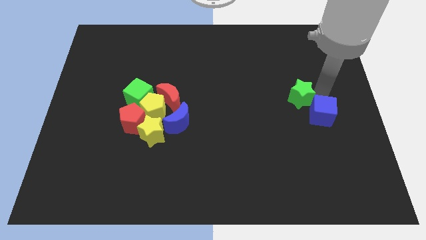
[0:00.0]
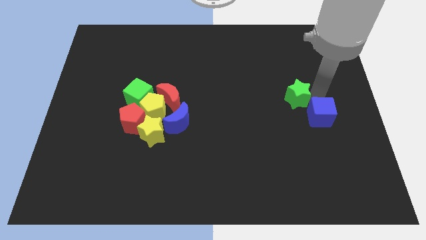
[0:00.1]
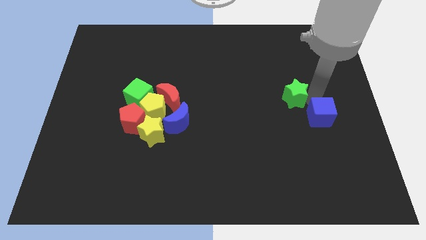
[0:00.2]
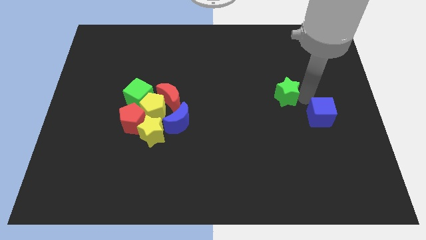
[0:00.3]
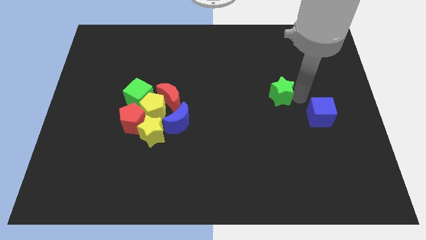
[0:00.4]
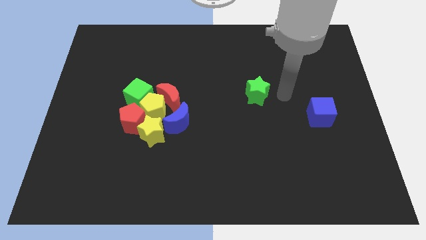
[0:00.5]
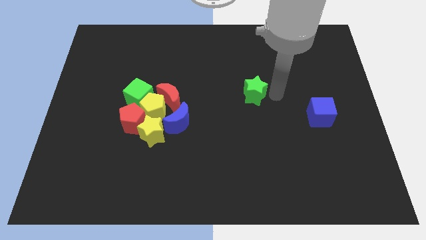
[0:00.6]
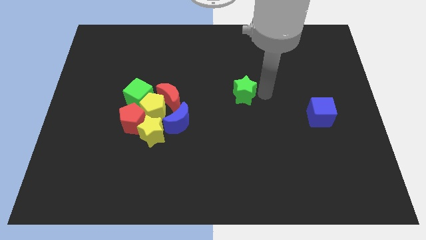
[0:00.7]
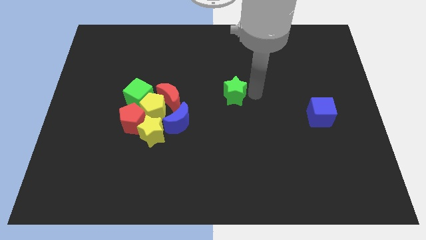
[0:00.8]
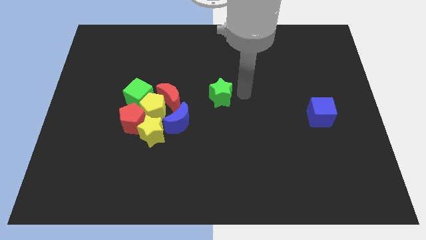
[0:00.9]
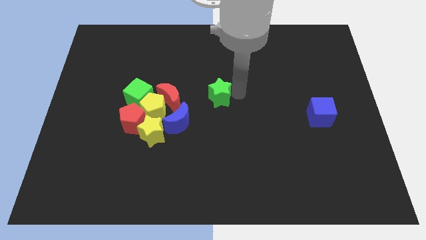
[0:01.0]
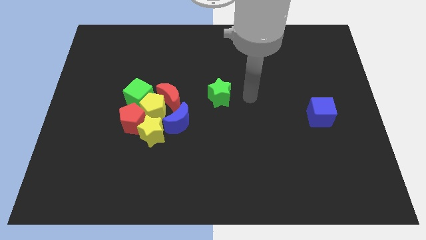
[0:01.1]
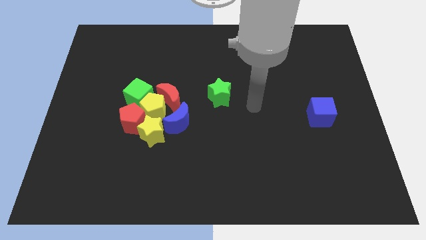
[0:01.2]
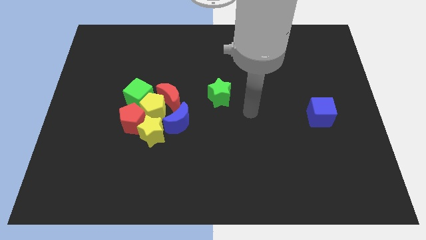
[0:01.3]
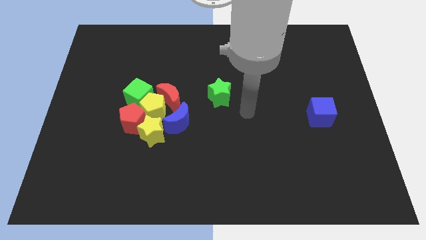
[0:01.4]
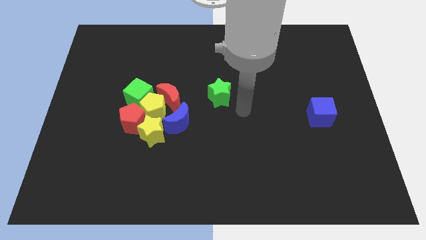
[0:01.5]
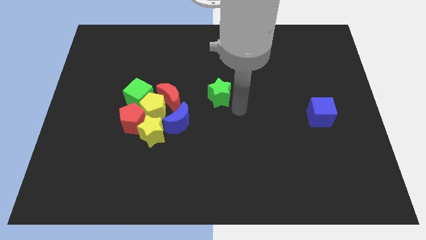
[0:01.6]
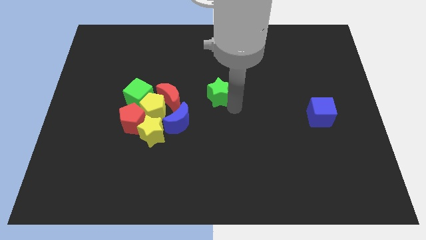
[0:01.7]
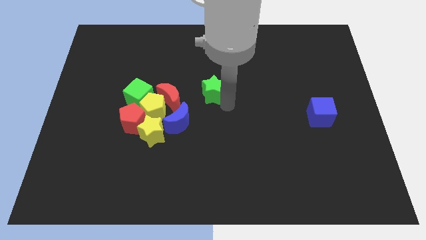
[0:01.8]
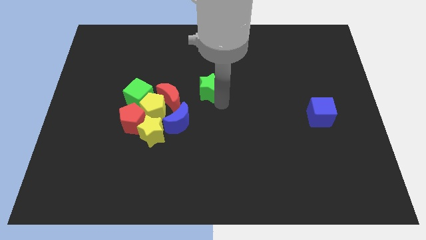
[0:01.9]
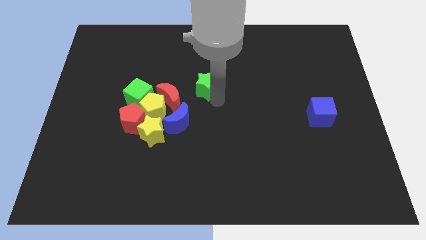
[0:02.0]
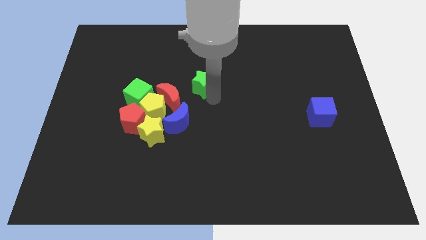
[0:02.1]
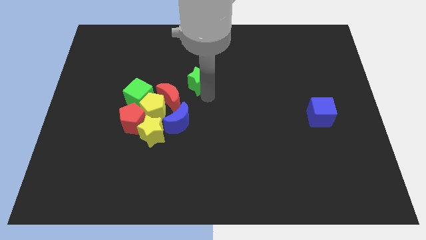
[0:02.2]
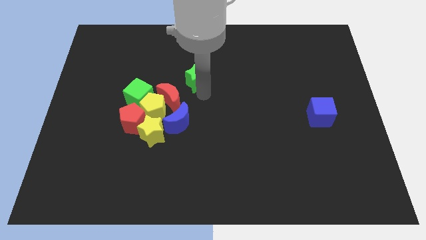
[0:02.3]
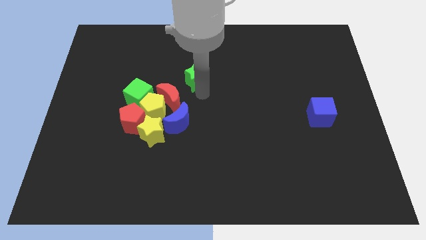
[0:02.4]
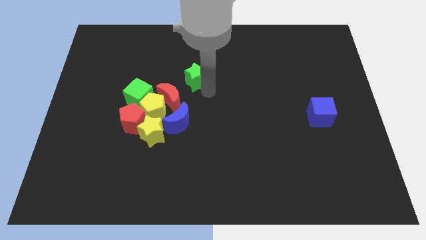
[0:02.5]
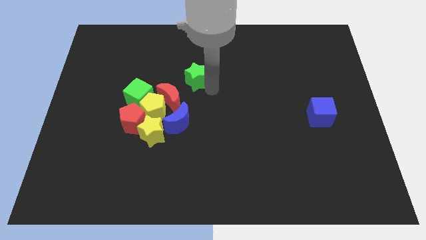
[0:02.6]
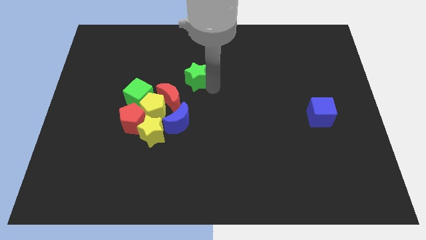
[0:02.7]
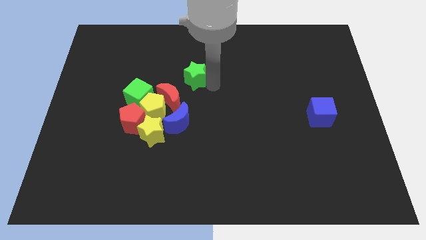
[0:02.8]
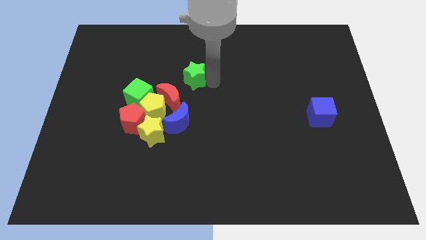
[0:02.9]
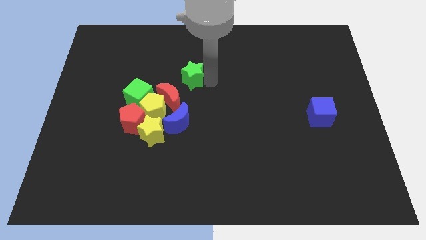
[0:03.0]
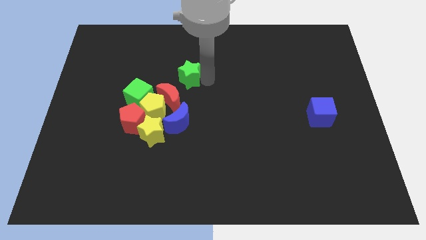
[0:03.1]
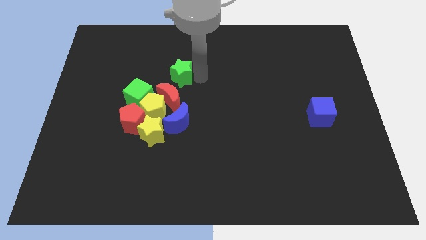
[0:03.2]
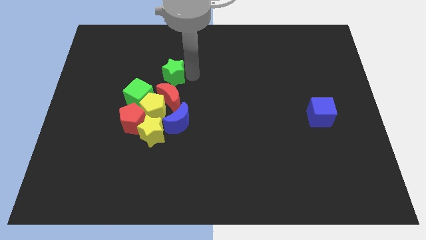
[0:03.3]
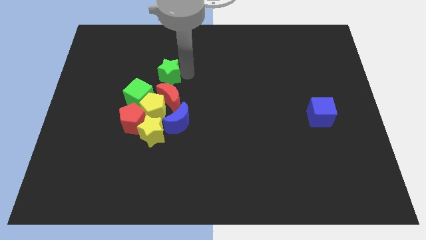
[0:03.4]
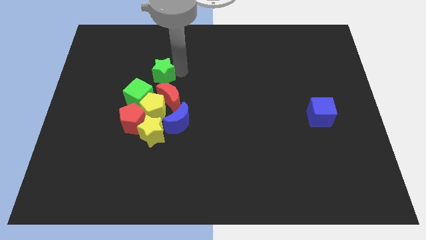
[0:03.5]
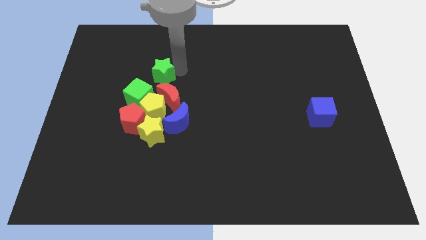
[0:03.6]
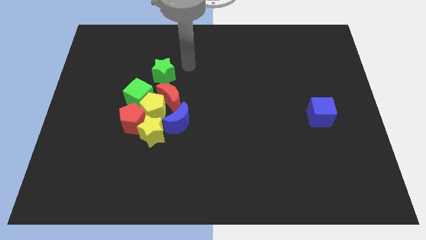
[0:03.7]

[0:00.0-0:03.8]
place the green star above the red crescent

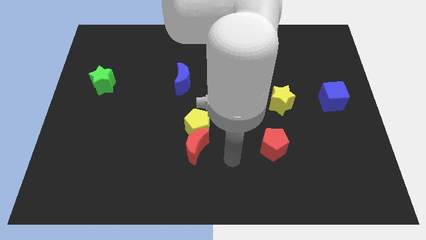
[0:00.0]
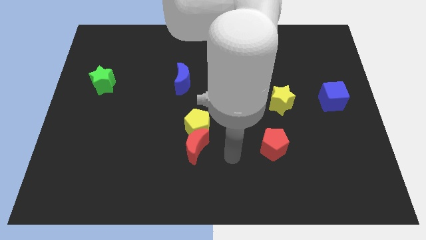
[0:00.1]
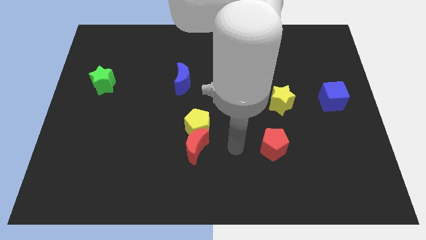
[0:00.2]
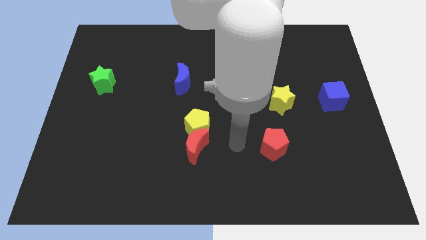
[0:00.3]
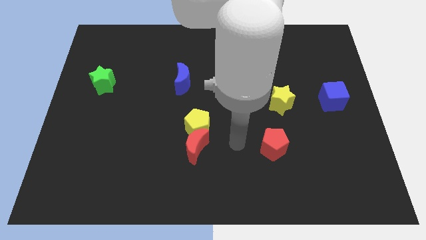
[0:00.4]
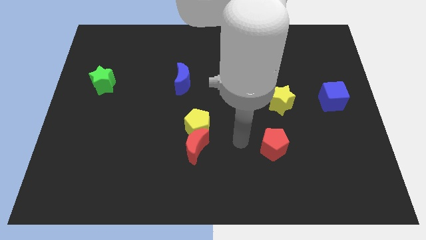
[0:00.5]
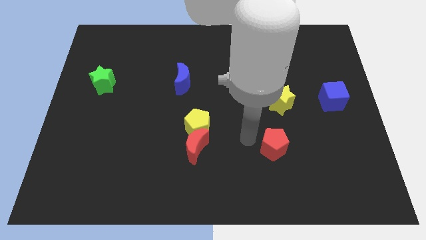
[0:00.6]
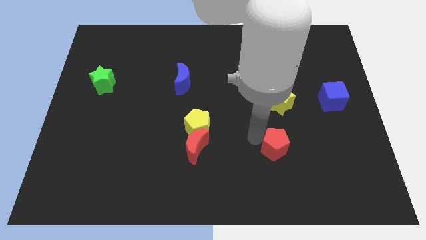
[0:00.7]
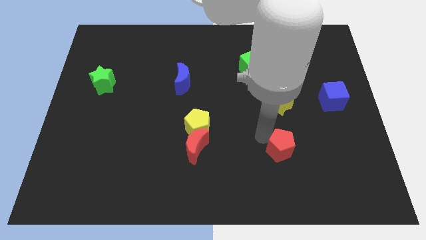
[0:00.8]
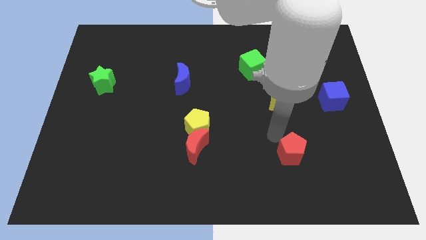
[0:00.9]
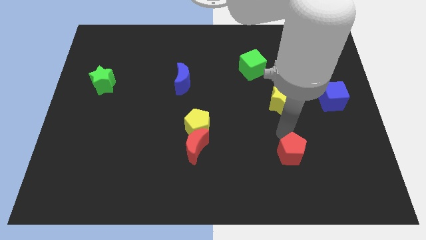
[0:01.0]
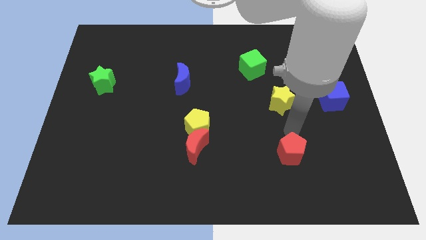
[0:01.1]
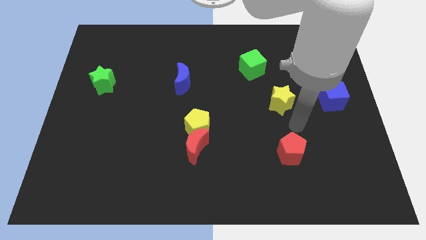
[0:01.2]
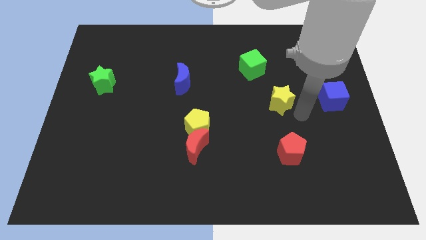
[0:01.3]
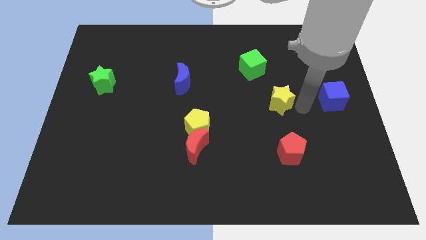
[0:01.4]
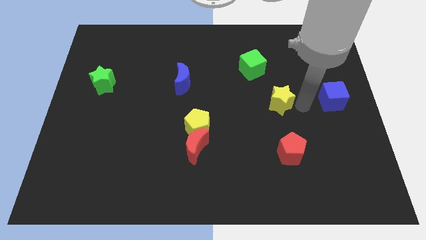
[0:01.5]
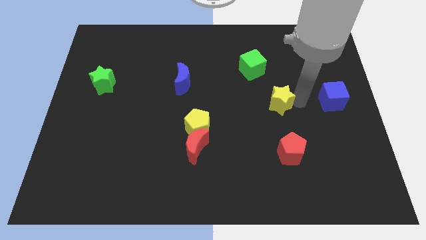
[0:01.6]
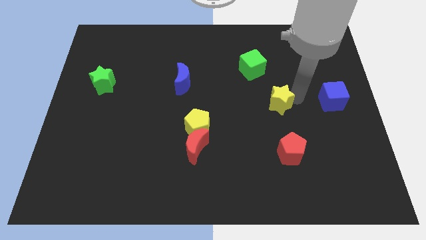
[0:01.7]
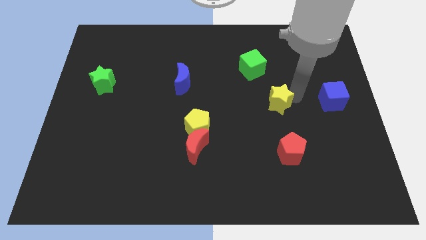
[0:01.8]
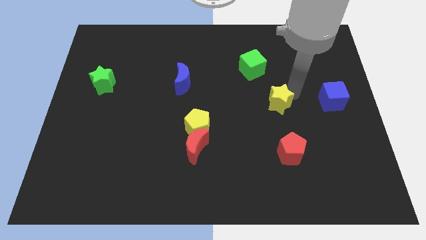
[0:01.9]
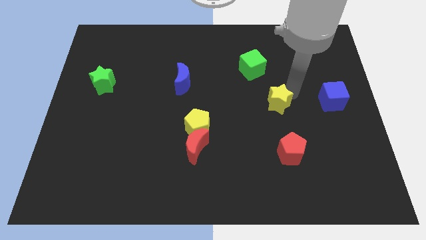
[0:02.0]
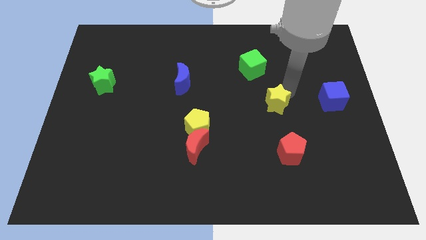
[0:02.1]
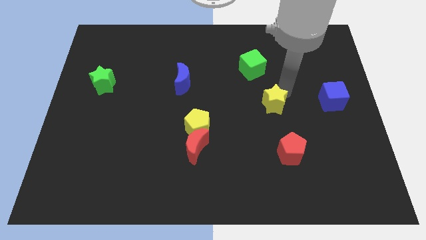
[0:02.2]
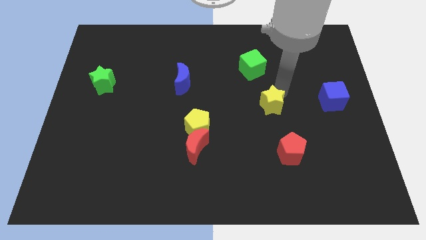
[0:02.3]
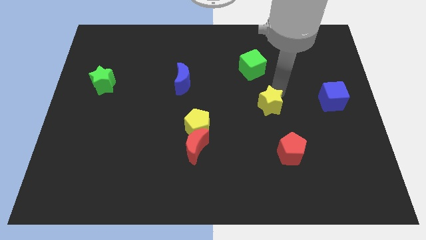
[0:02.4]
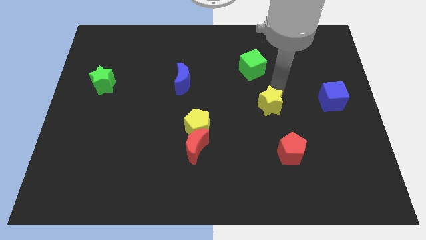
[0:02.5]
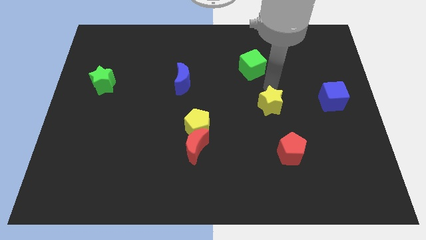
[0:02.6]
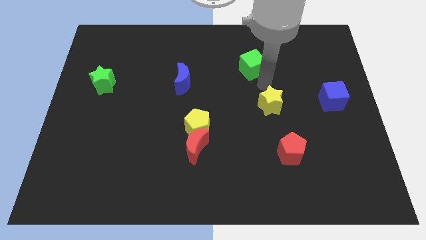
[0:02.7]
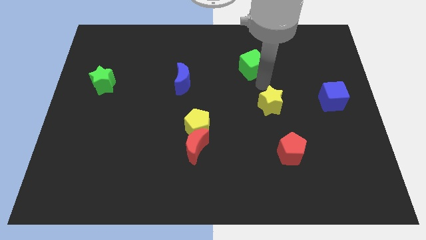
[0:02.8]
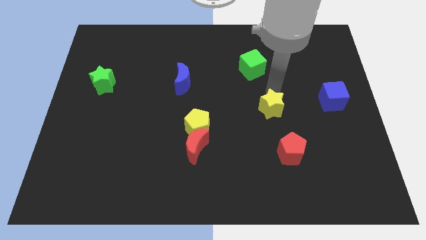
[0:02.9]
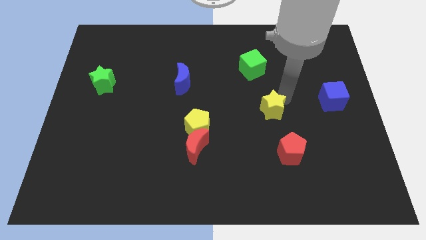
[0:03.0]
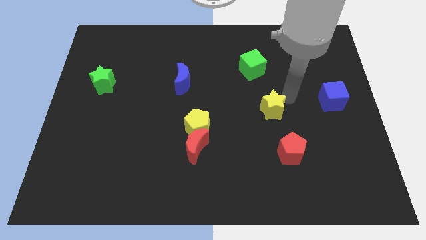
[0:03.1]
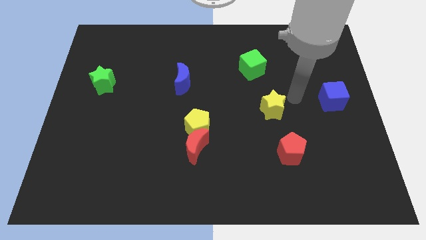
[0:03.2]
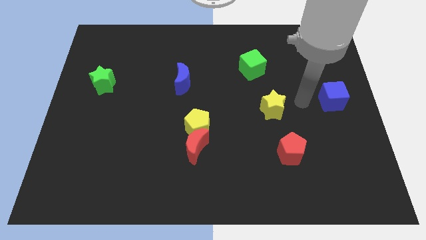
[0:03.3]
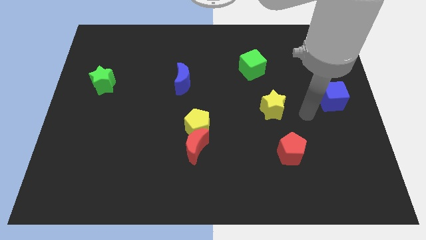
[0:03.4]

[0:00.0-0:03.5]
place the yellow star diagonally in between the green cube and red pentagon

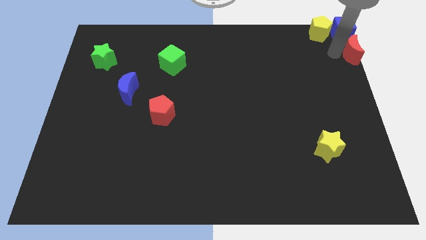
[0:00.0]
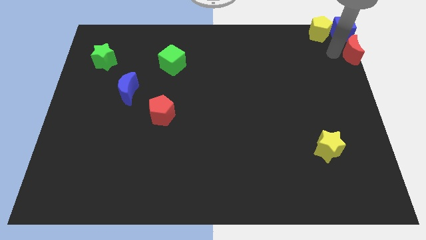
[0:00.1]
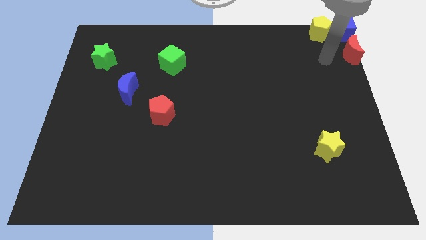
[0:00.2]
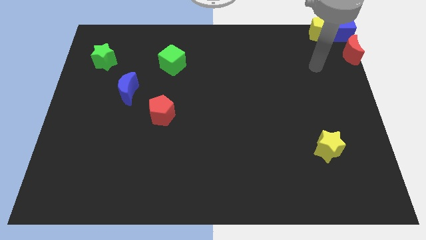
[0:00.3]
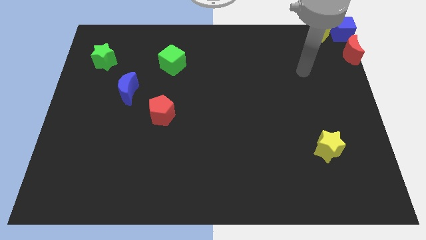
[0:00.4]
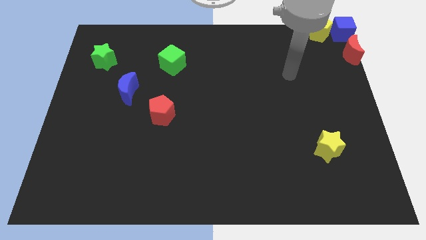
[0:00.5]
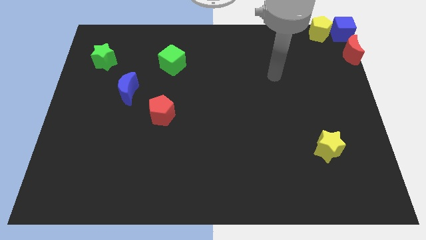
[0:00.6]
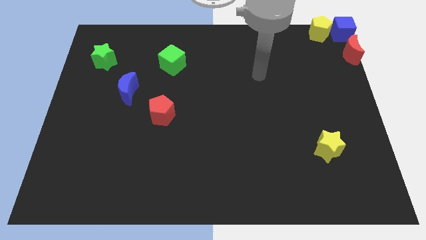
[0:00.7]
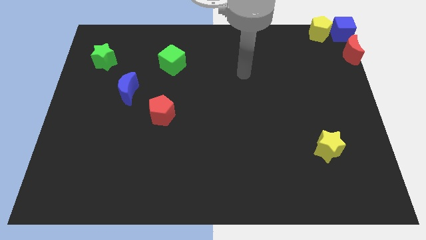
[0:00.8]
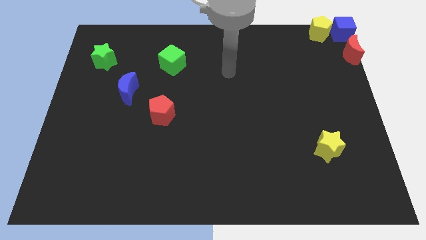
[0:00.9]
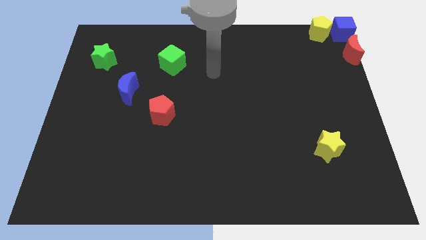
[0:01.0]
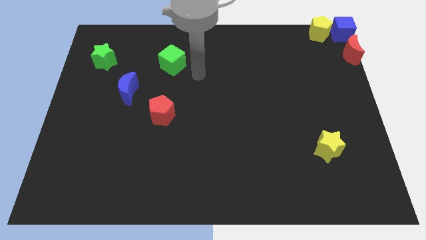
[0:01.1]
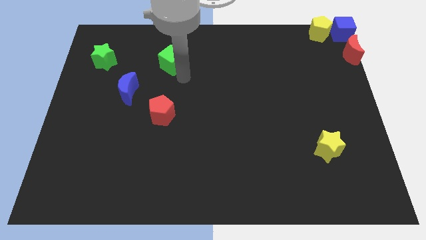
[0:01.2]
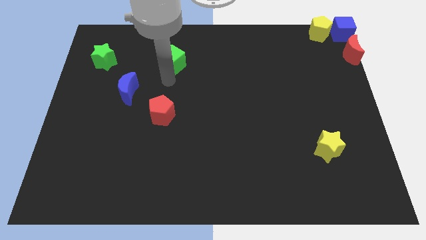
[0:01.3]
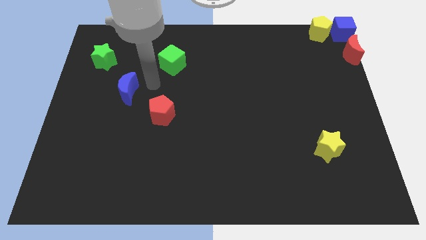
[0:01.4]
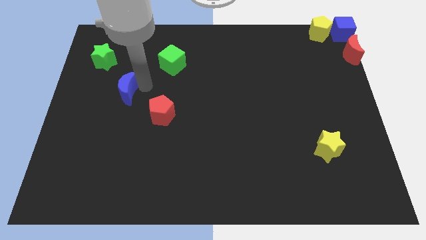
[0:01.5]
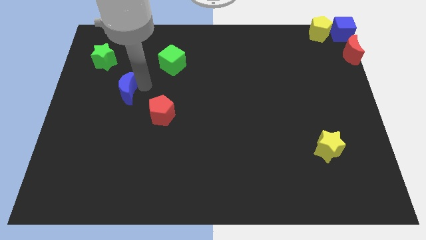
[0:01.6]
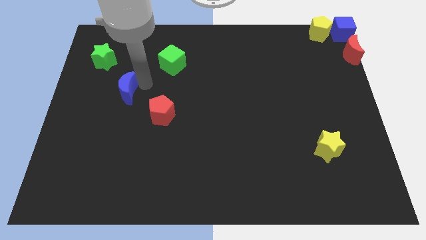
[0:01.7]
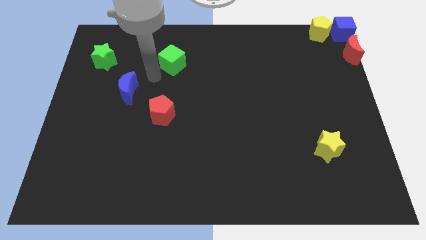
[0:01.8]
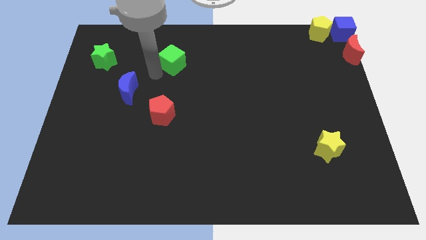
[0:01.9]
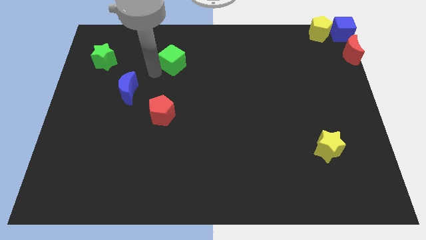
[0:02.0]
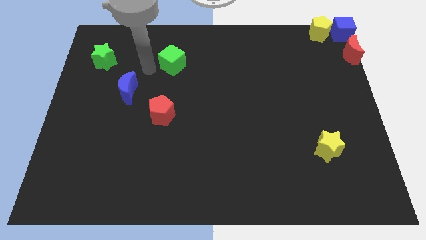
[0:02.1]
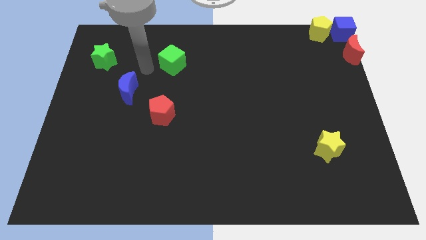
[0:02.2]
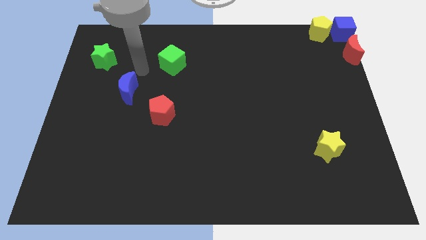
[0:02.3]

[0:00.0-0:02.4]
move your arm away from the red moon
